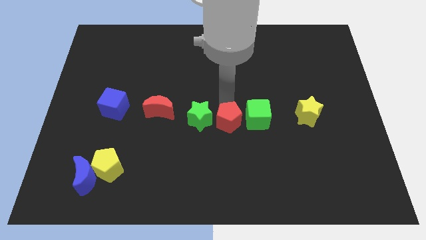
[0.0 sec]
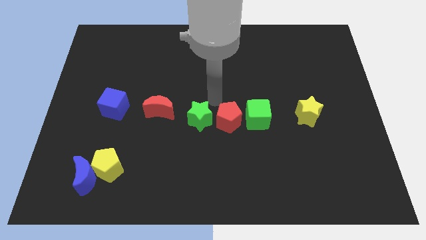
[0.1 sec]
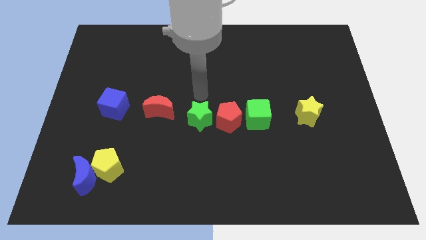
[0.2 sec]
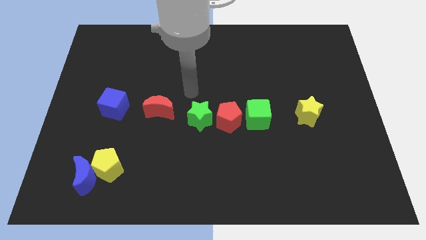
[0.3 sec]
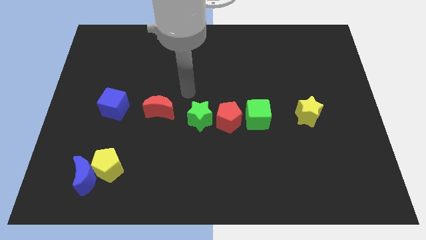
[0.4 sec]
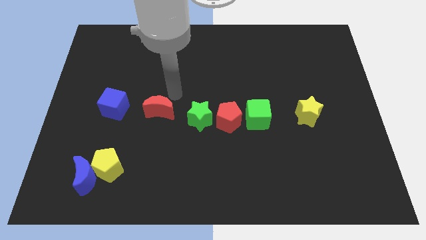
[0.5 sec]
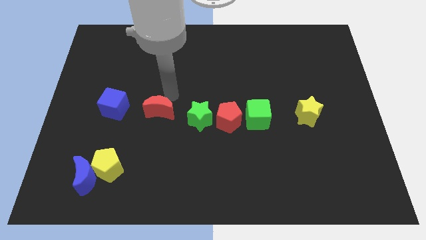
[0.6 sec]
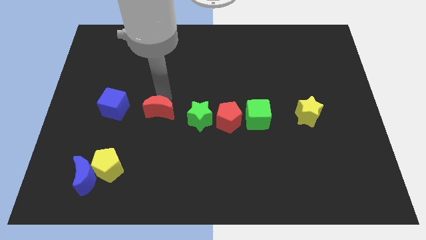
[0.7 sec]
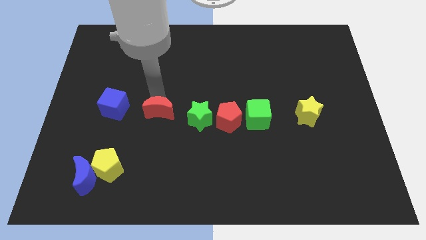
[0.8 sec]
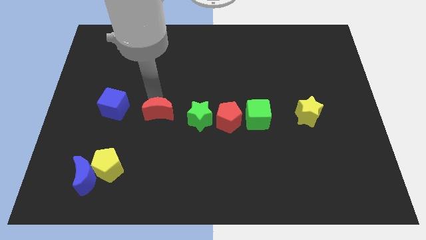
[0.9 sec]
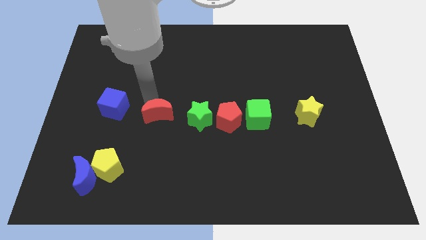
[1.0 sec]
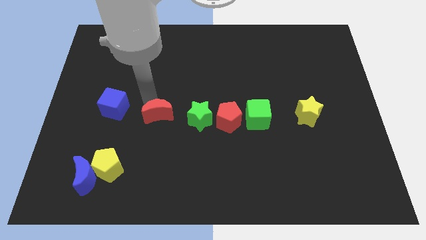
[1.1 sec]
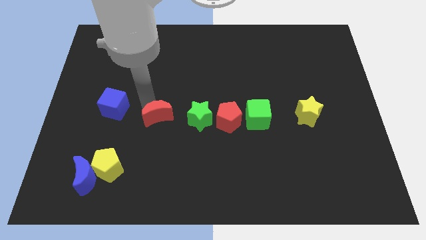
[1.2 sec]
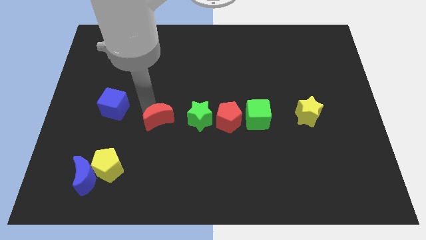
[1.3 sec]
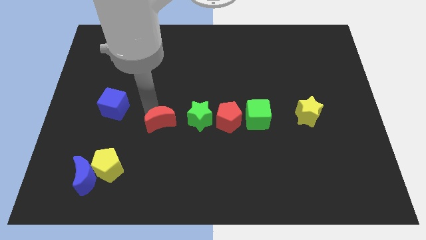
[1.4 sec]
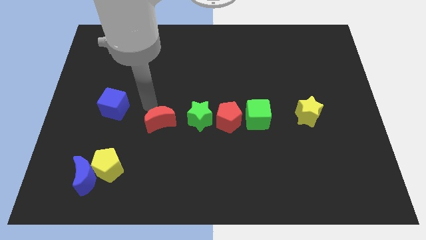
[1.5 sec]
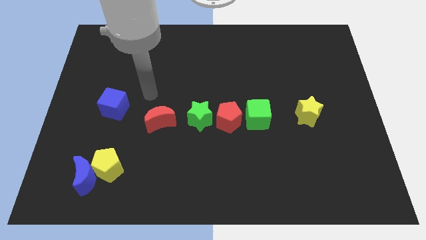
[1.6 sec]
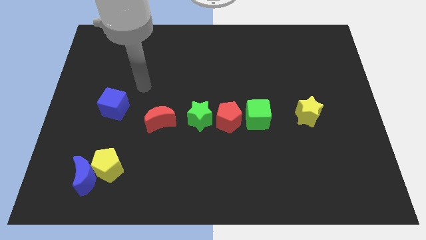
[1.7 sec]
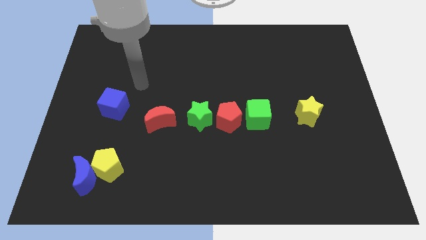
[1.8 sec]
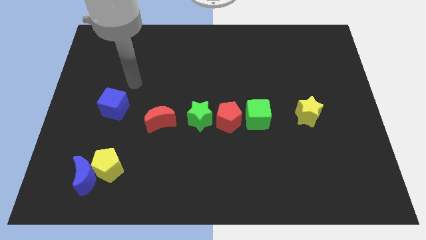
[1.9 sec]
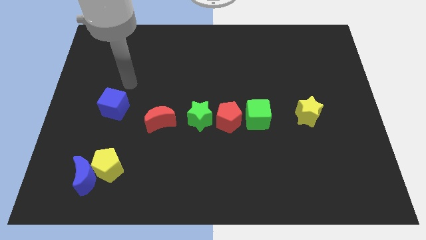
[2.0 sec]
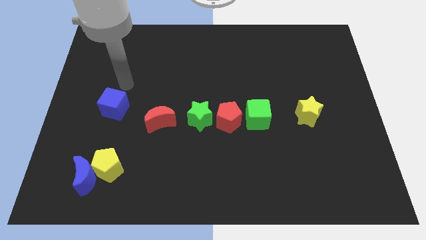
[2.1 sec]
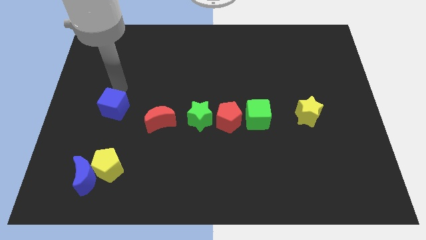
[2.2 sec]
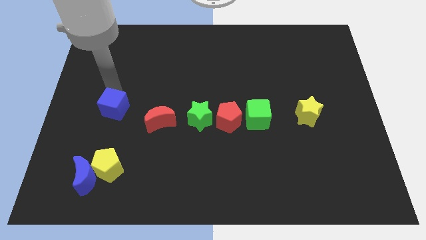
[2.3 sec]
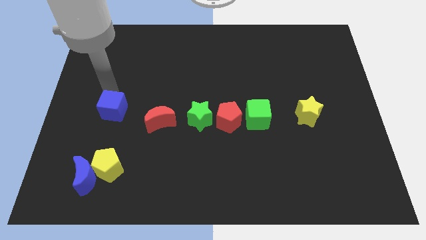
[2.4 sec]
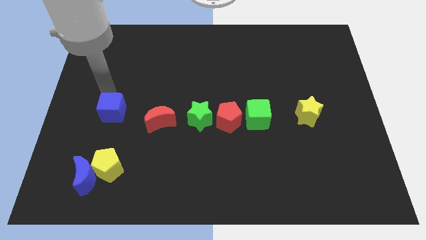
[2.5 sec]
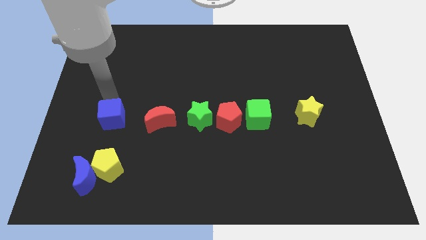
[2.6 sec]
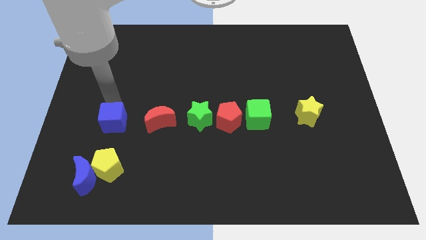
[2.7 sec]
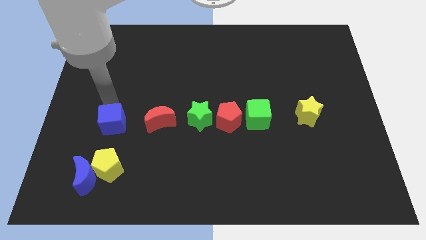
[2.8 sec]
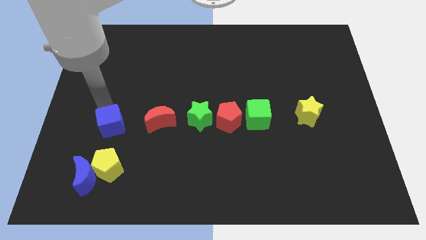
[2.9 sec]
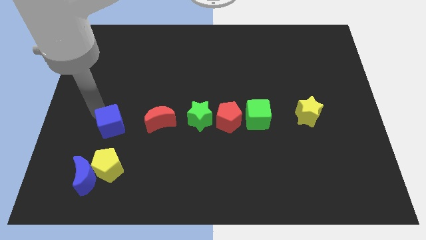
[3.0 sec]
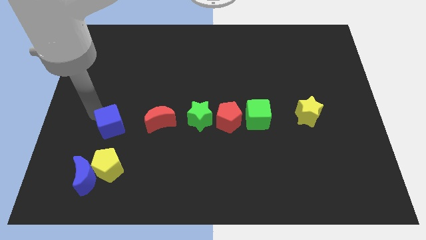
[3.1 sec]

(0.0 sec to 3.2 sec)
push the red crescent and the blue cube slightly to the bottom

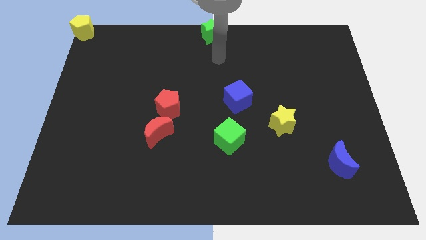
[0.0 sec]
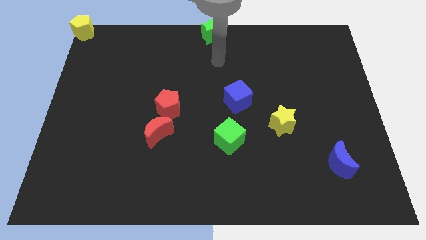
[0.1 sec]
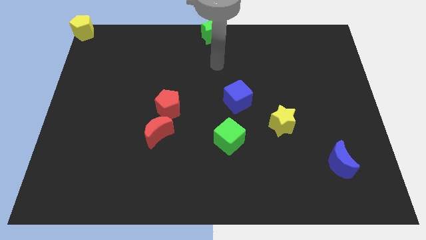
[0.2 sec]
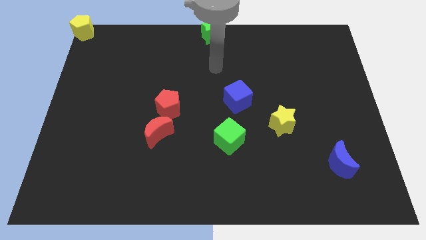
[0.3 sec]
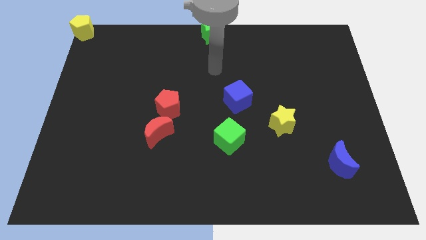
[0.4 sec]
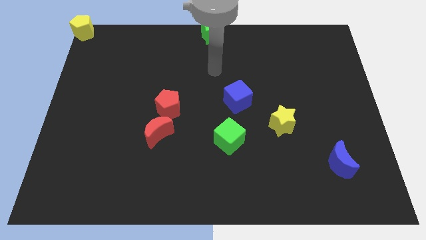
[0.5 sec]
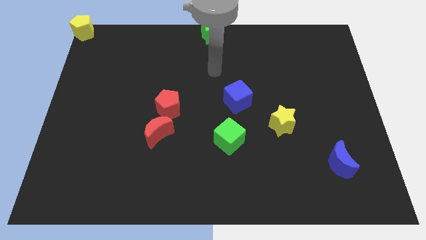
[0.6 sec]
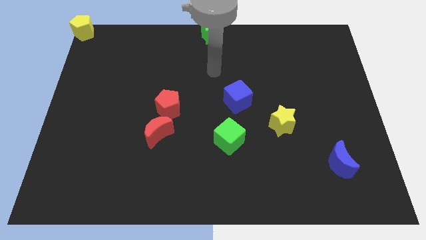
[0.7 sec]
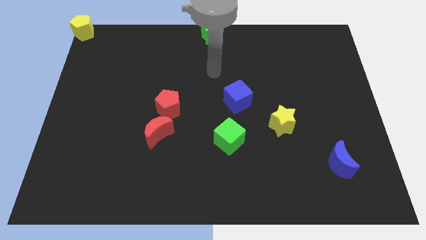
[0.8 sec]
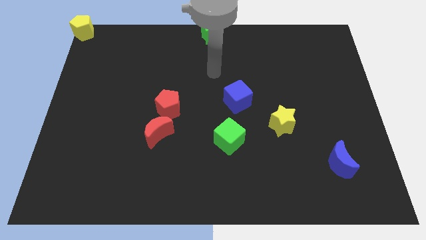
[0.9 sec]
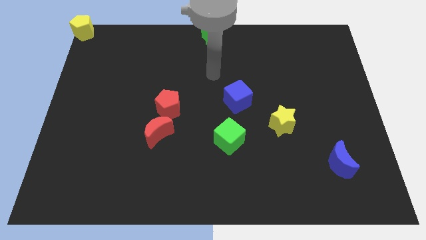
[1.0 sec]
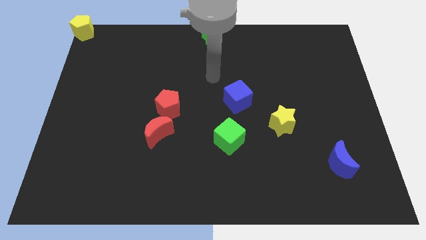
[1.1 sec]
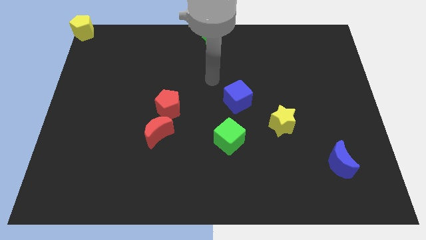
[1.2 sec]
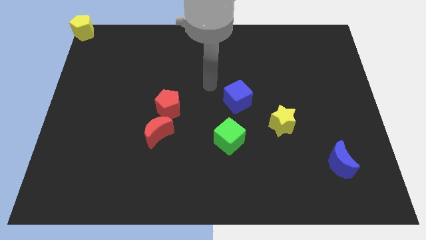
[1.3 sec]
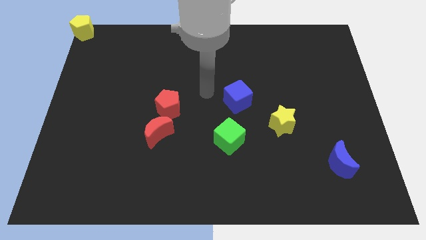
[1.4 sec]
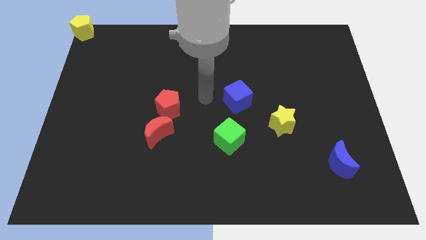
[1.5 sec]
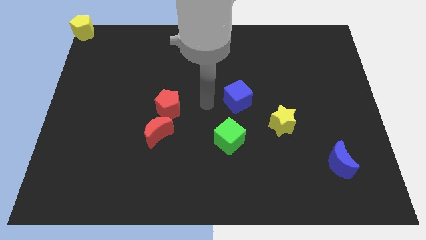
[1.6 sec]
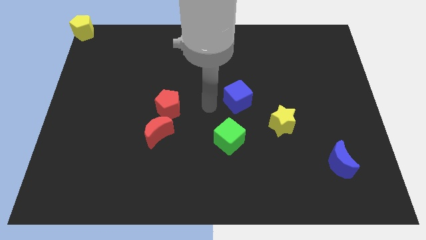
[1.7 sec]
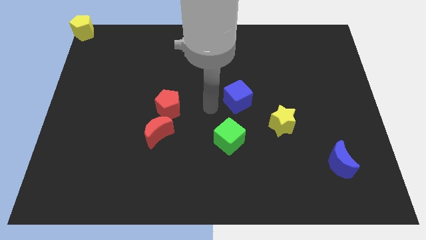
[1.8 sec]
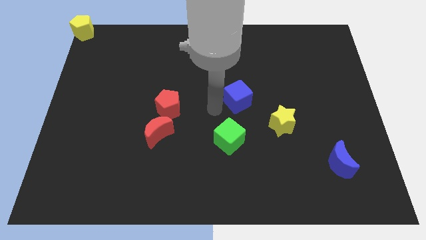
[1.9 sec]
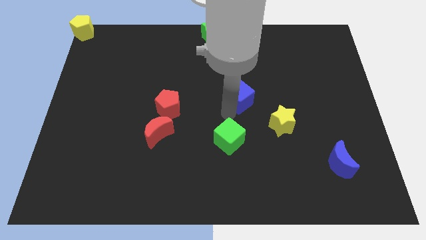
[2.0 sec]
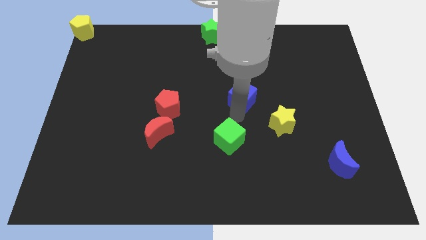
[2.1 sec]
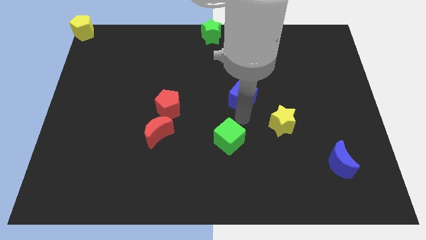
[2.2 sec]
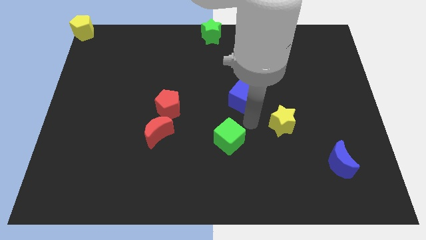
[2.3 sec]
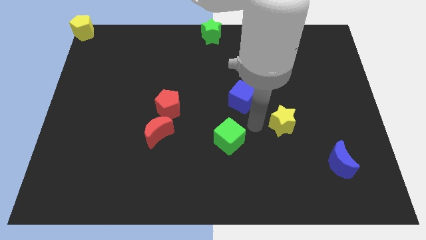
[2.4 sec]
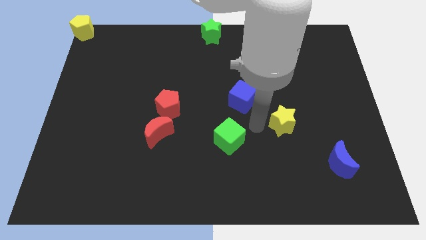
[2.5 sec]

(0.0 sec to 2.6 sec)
touch the blue cube on the left side

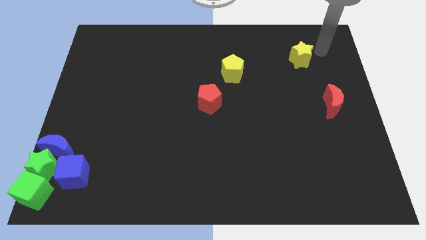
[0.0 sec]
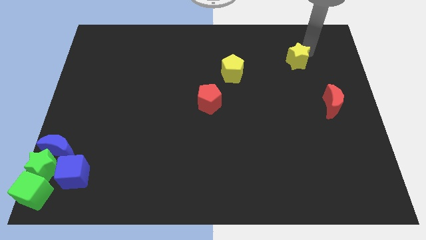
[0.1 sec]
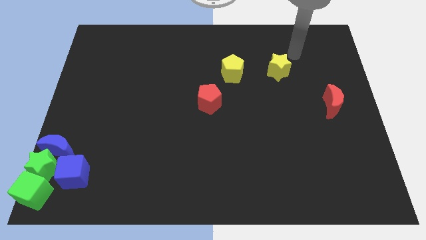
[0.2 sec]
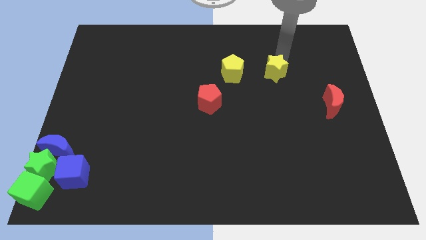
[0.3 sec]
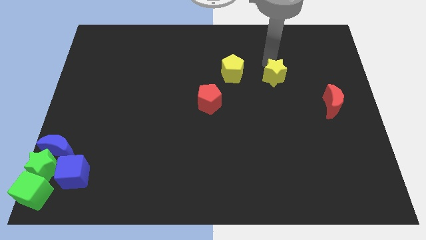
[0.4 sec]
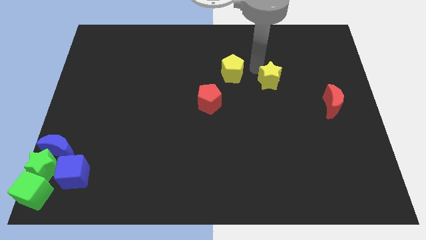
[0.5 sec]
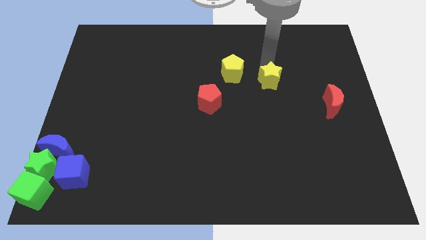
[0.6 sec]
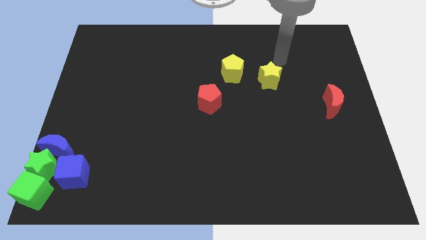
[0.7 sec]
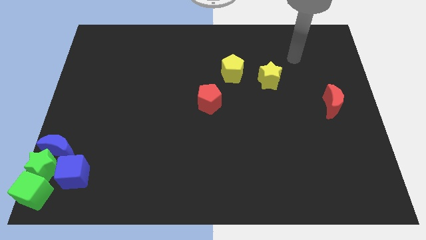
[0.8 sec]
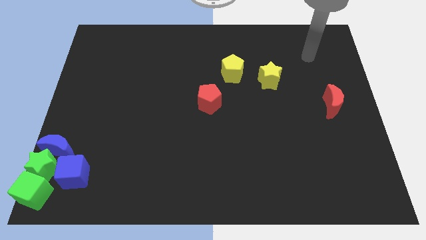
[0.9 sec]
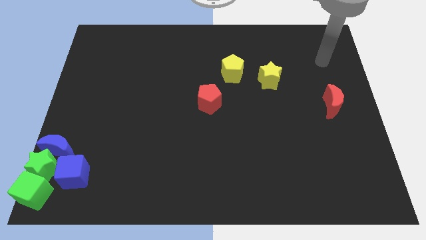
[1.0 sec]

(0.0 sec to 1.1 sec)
place the yellow star to the right of the yellow pentagon

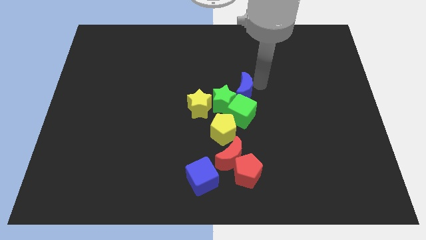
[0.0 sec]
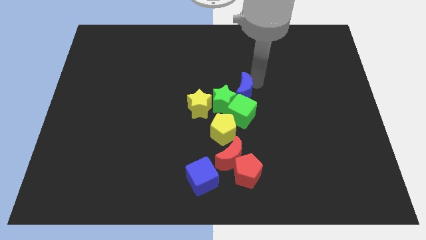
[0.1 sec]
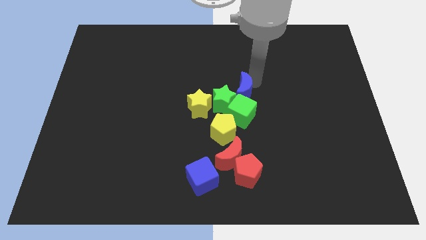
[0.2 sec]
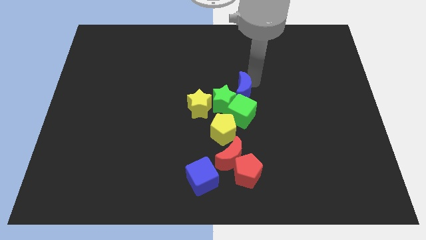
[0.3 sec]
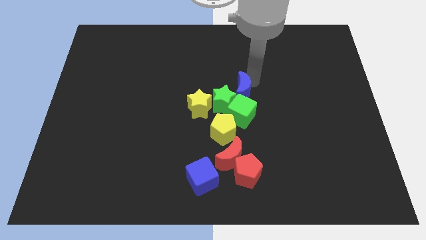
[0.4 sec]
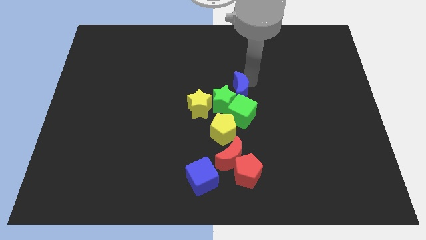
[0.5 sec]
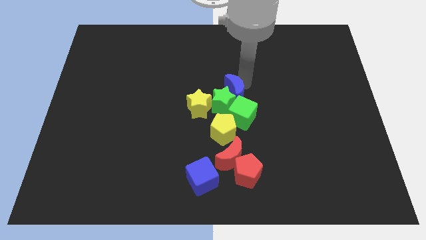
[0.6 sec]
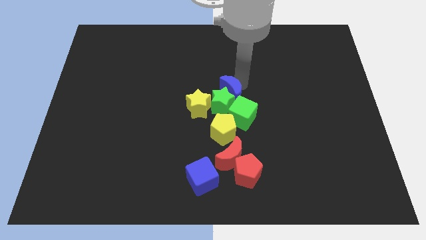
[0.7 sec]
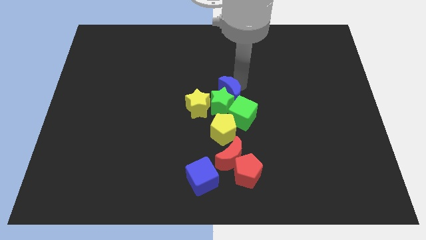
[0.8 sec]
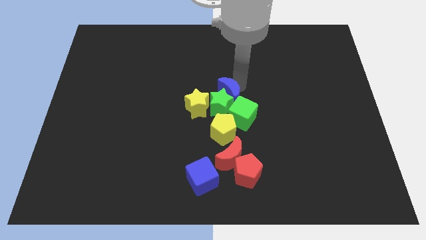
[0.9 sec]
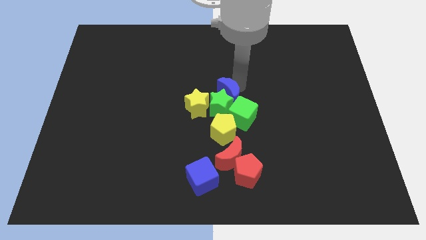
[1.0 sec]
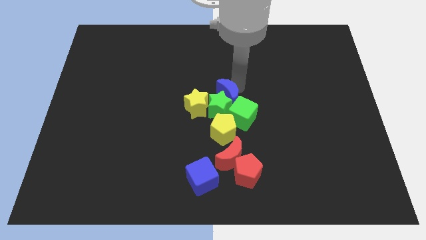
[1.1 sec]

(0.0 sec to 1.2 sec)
push the blue moon into the green star

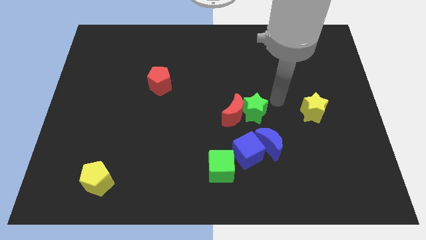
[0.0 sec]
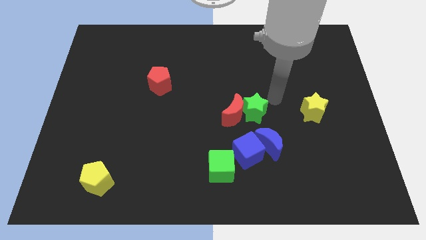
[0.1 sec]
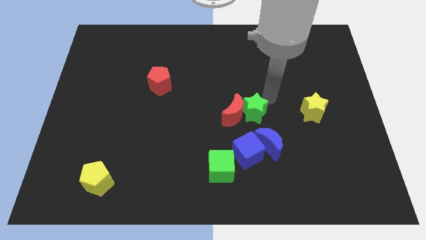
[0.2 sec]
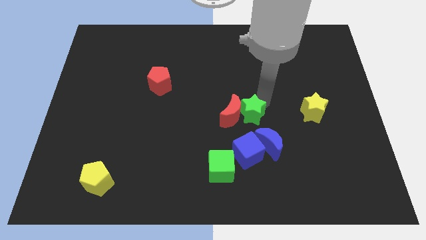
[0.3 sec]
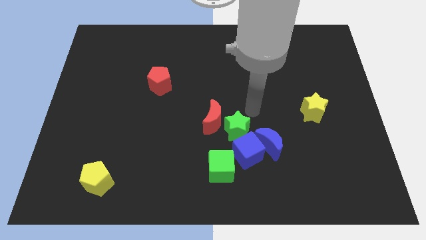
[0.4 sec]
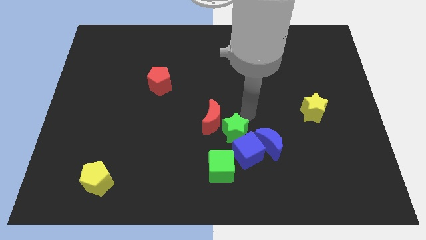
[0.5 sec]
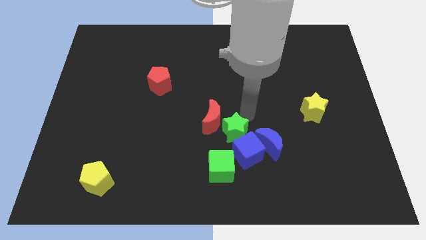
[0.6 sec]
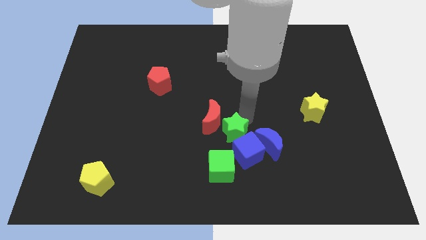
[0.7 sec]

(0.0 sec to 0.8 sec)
separate the green star red crescent

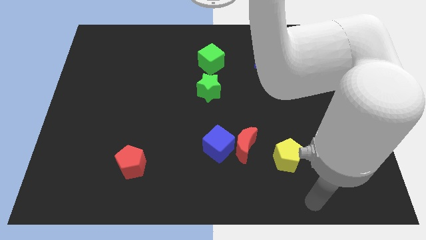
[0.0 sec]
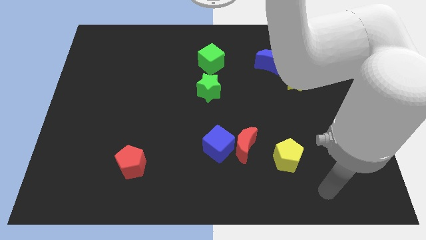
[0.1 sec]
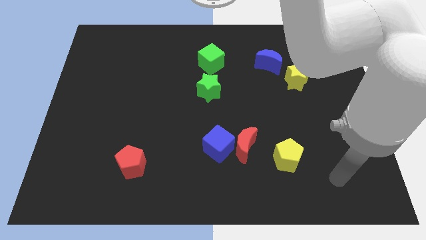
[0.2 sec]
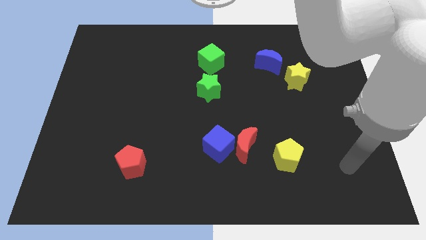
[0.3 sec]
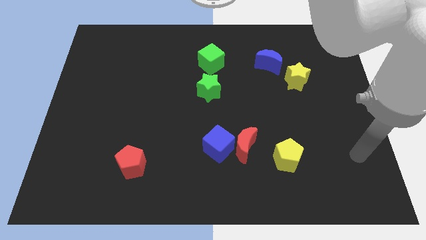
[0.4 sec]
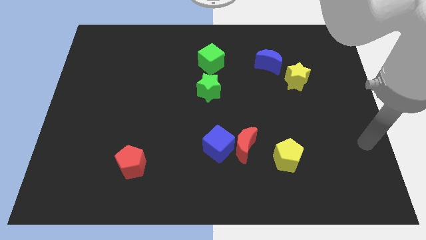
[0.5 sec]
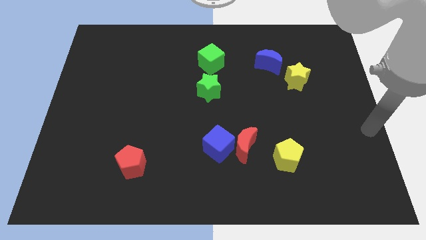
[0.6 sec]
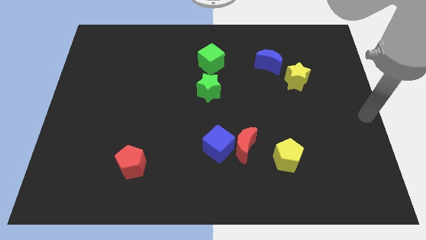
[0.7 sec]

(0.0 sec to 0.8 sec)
move the arm at the center right corner of the board
